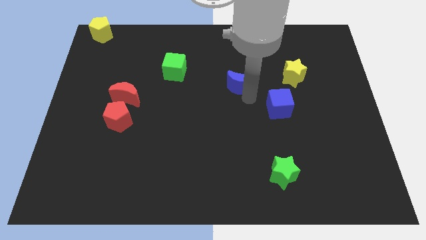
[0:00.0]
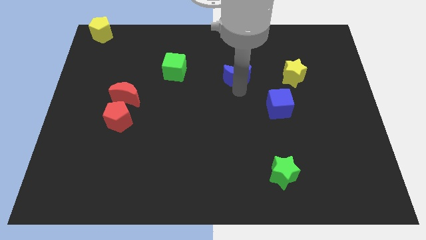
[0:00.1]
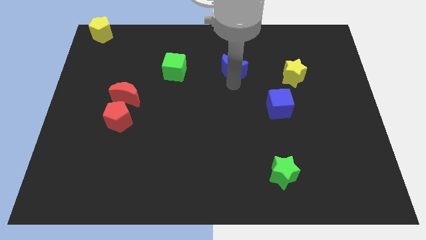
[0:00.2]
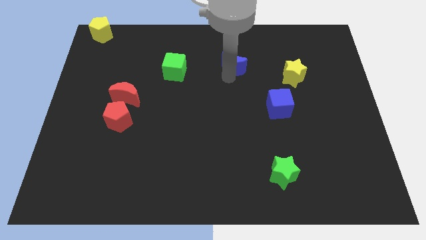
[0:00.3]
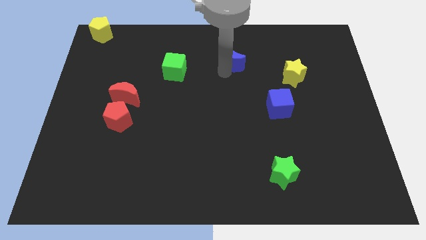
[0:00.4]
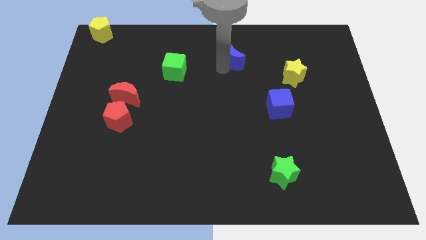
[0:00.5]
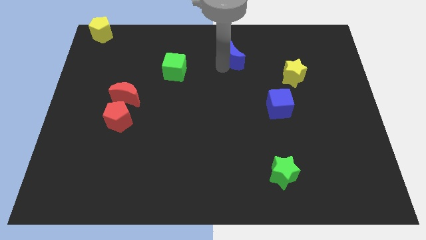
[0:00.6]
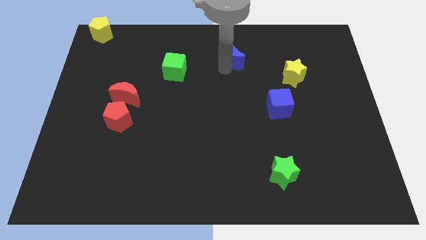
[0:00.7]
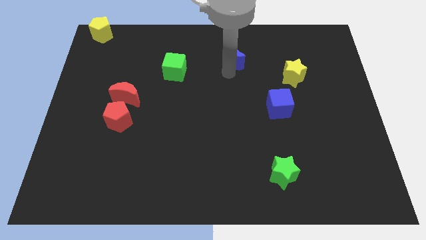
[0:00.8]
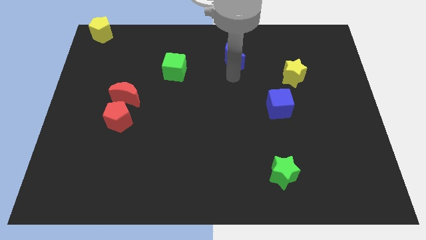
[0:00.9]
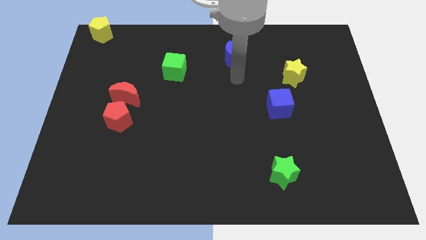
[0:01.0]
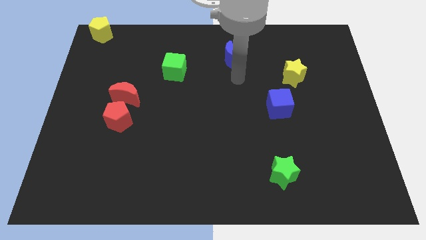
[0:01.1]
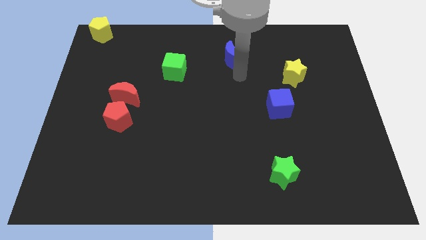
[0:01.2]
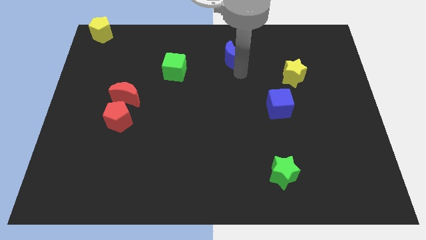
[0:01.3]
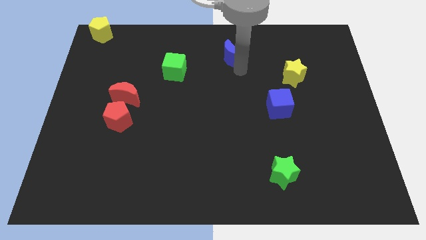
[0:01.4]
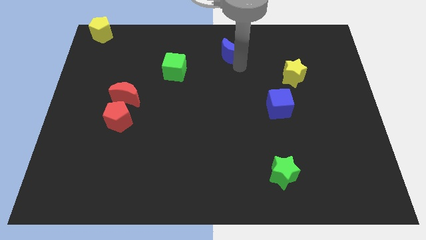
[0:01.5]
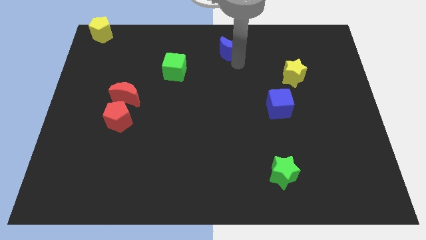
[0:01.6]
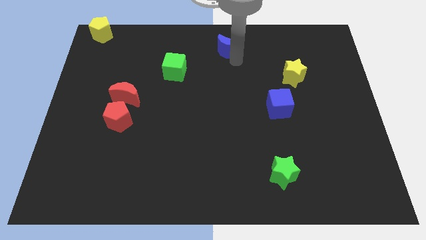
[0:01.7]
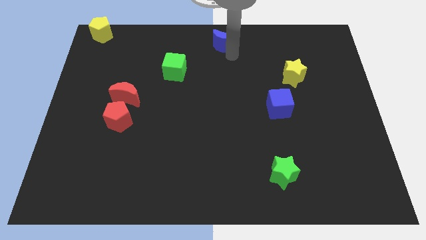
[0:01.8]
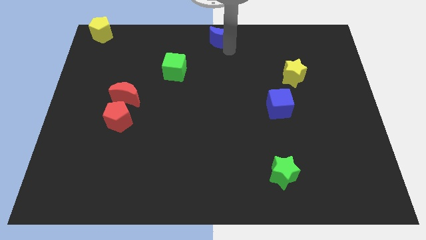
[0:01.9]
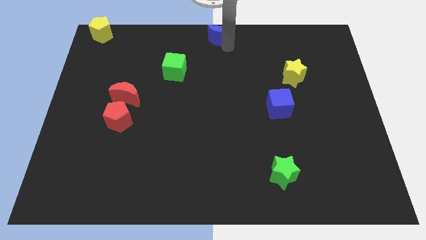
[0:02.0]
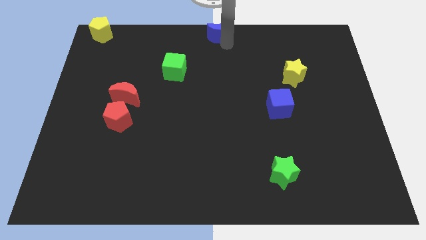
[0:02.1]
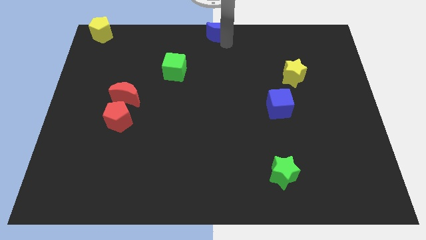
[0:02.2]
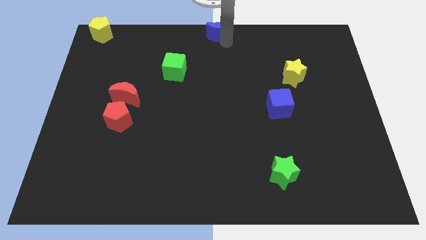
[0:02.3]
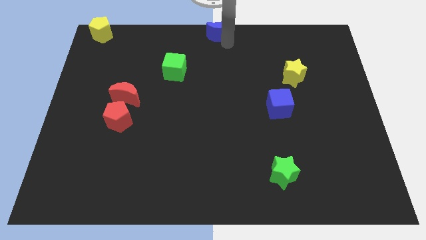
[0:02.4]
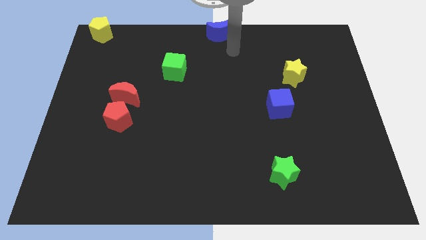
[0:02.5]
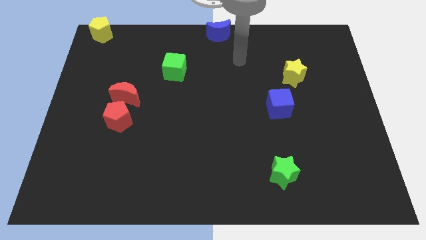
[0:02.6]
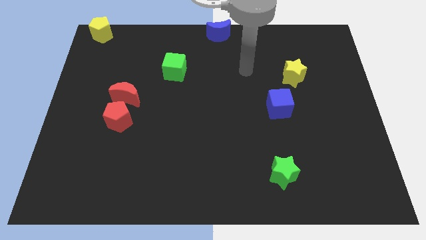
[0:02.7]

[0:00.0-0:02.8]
place the blue crescent at the top center of the board

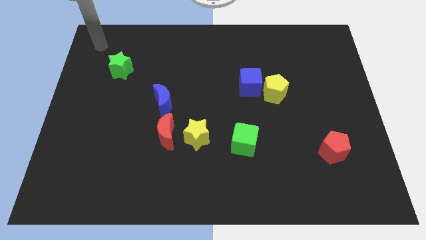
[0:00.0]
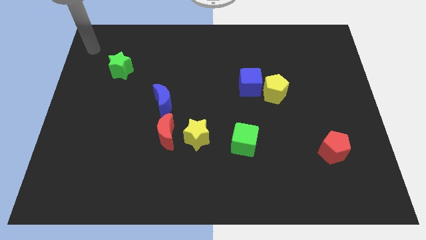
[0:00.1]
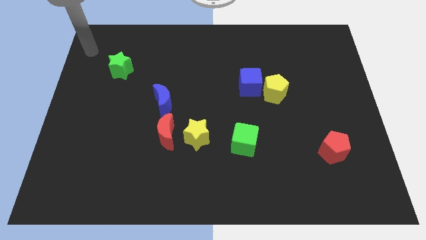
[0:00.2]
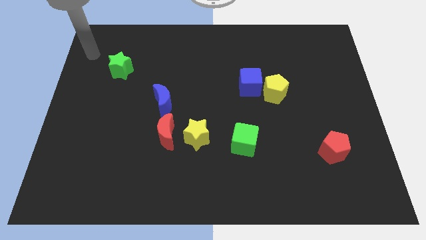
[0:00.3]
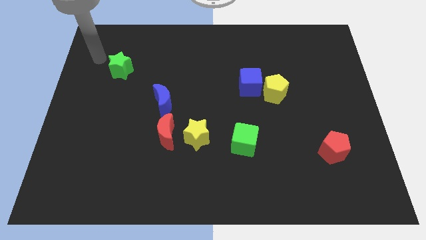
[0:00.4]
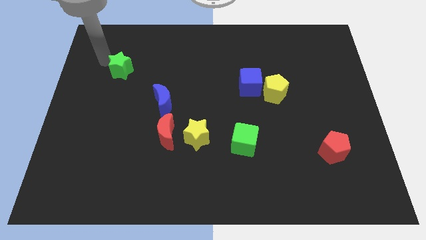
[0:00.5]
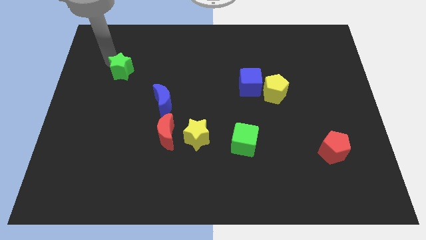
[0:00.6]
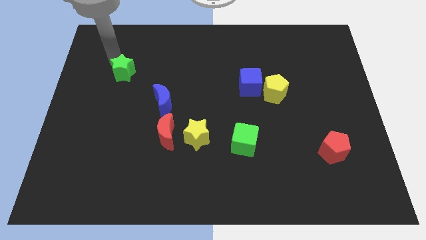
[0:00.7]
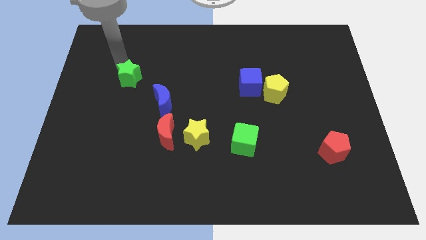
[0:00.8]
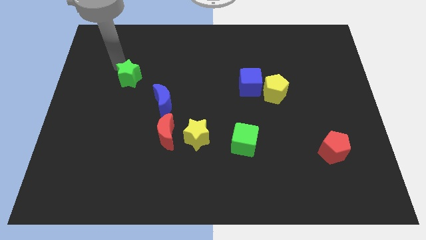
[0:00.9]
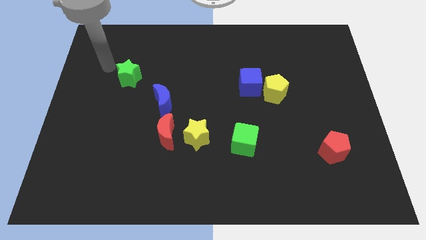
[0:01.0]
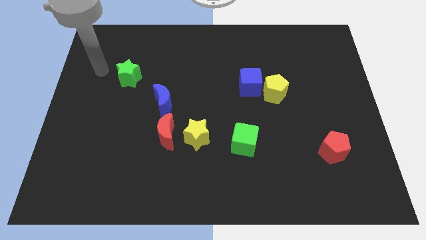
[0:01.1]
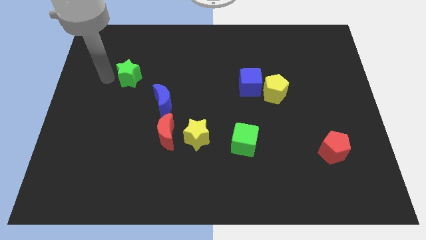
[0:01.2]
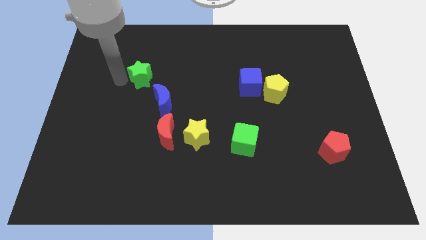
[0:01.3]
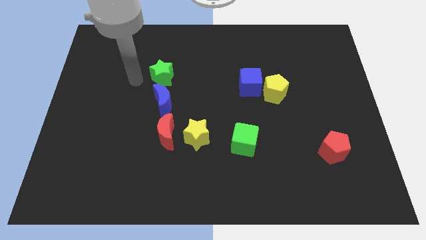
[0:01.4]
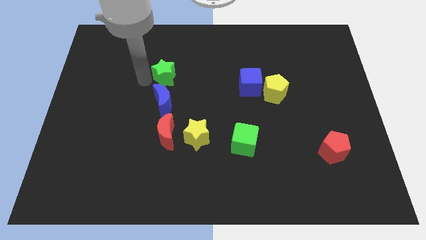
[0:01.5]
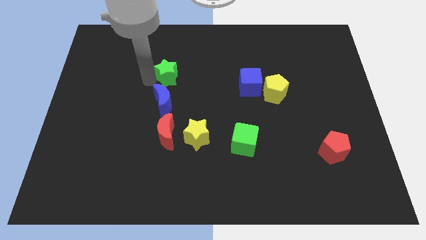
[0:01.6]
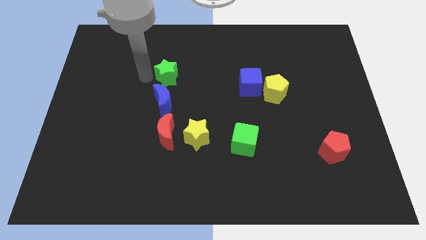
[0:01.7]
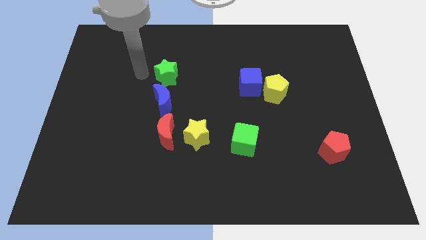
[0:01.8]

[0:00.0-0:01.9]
move the green star to the top of blue moon

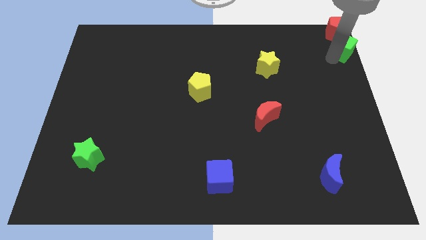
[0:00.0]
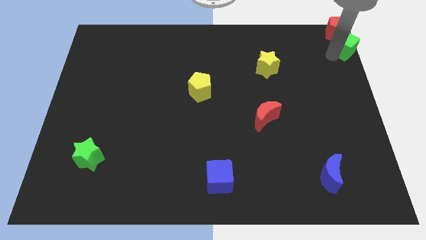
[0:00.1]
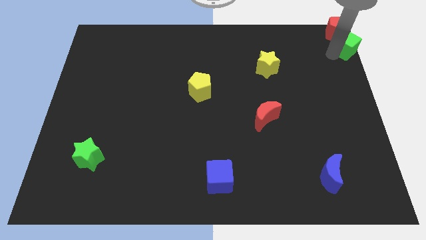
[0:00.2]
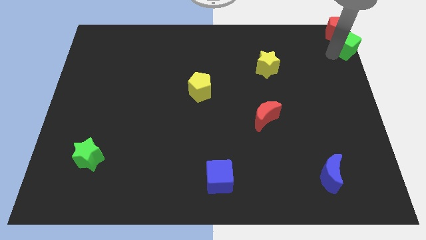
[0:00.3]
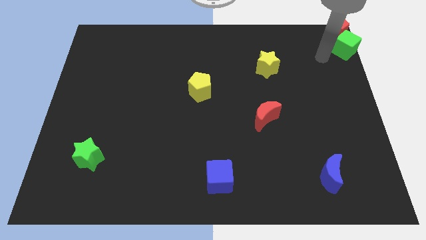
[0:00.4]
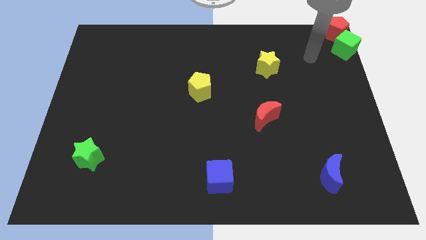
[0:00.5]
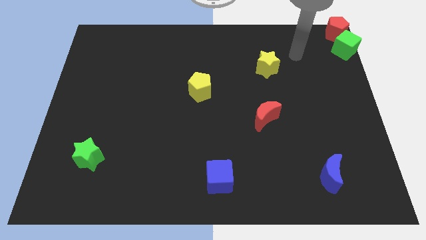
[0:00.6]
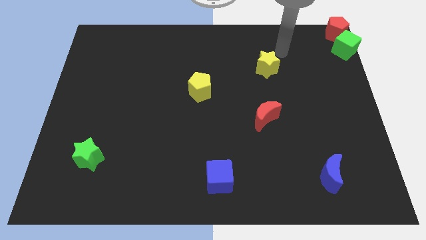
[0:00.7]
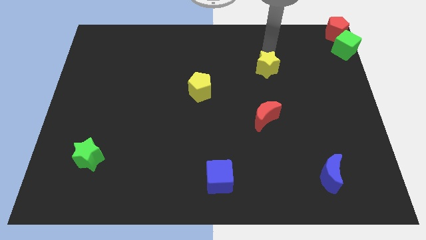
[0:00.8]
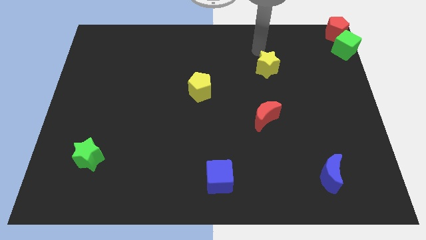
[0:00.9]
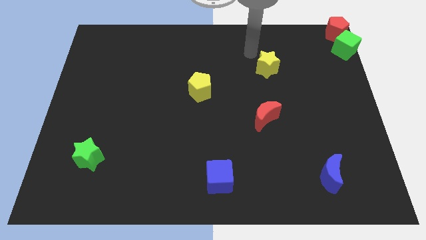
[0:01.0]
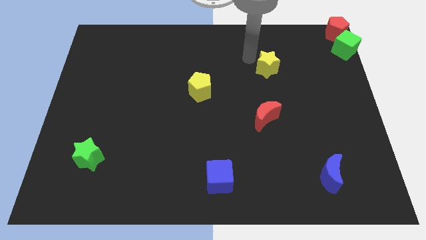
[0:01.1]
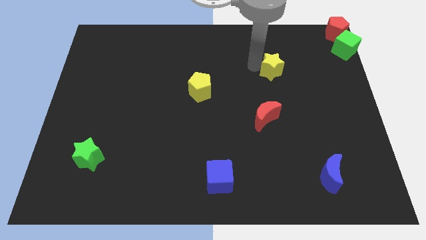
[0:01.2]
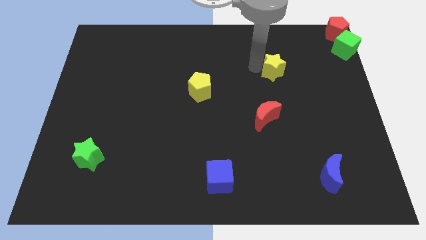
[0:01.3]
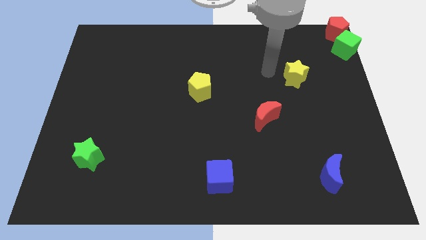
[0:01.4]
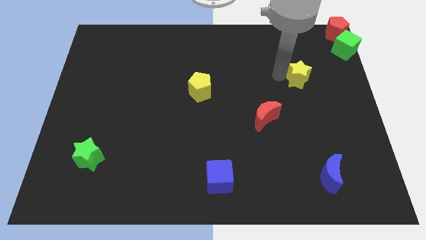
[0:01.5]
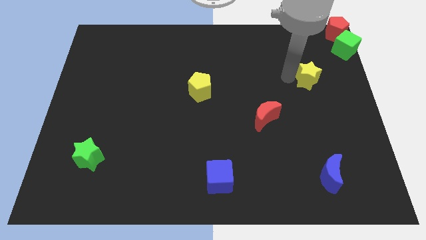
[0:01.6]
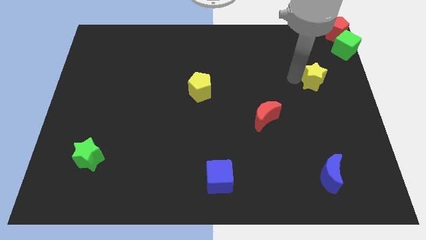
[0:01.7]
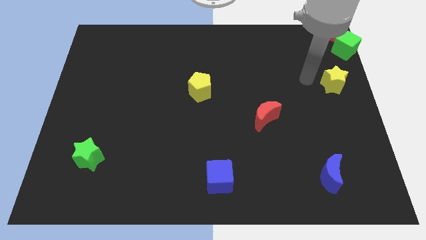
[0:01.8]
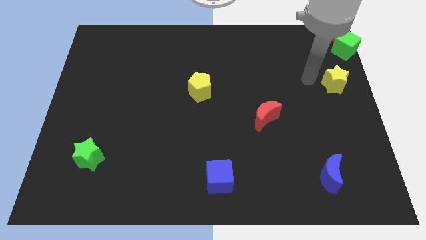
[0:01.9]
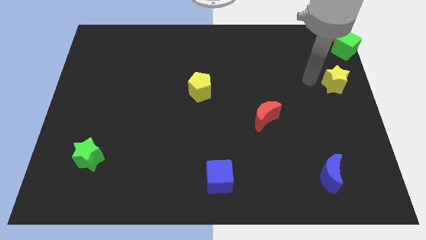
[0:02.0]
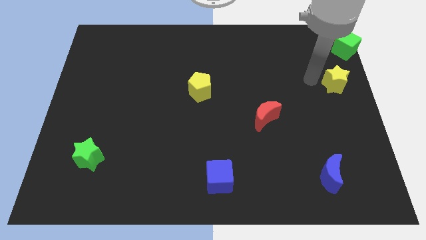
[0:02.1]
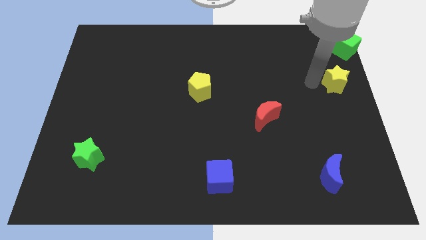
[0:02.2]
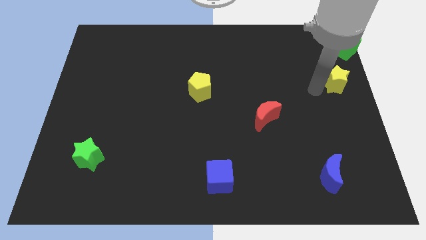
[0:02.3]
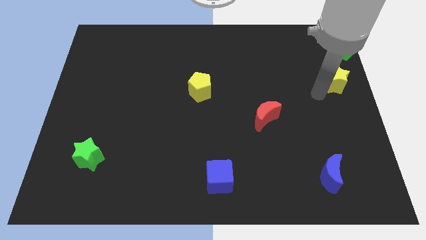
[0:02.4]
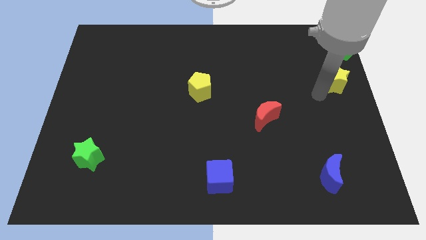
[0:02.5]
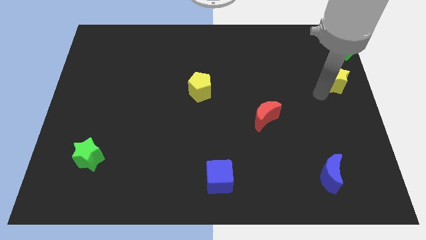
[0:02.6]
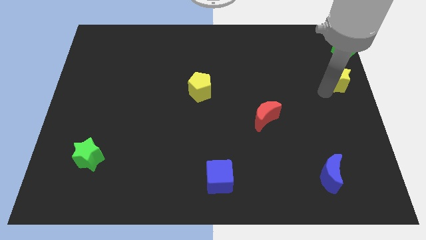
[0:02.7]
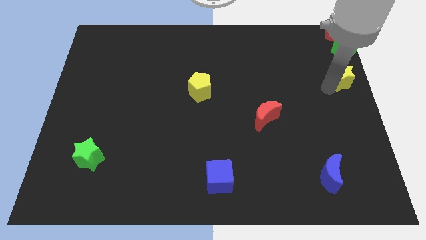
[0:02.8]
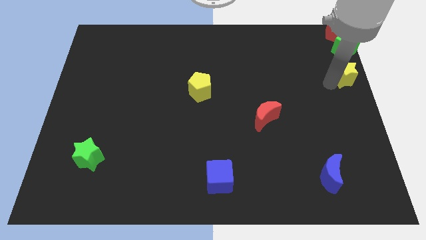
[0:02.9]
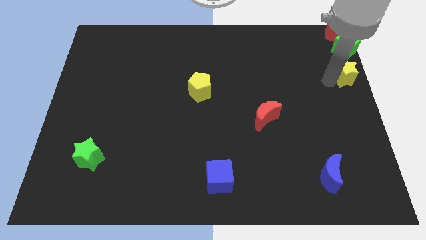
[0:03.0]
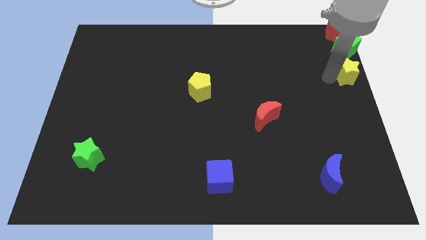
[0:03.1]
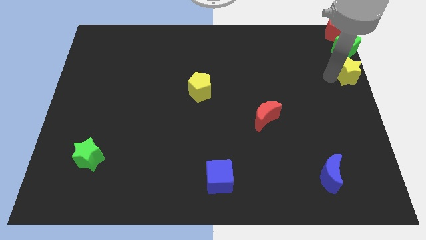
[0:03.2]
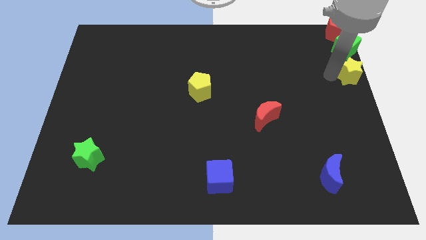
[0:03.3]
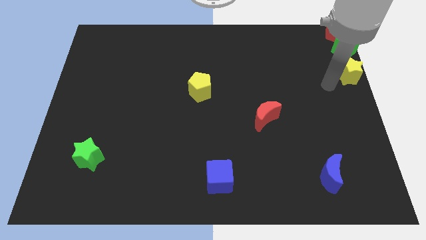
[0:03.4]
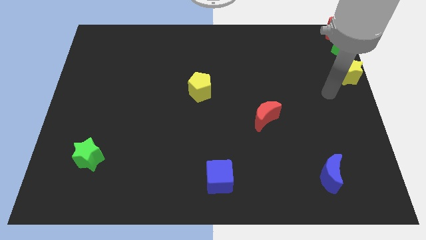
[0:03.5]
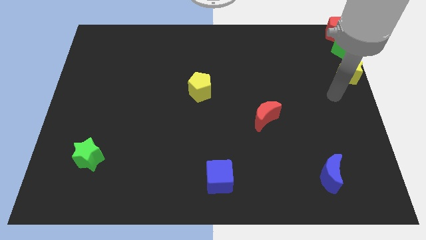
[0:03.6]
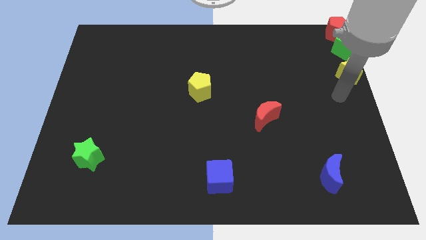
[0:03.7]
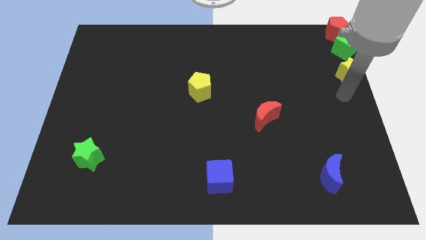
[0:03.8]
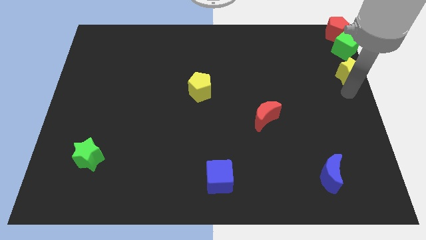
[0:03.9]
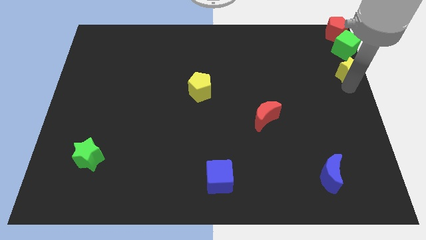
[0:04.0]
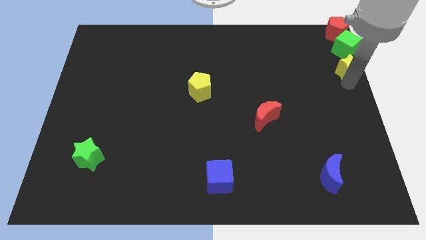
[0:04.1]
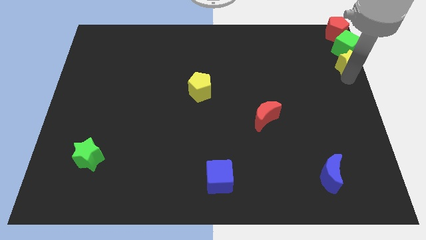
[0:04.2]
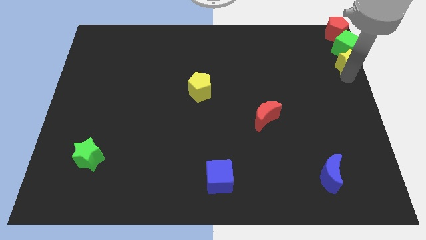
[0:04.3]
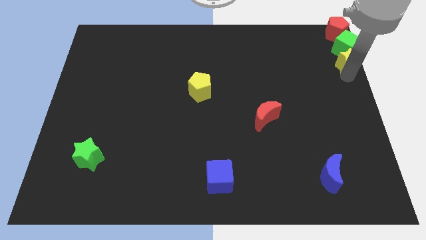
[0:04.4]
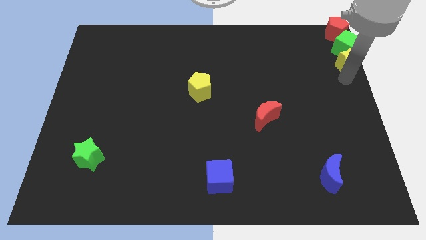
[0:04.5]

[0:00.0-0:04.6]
push yellow pentagon below green cube
